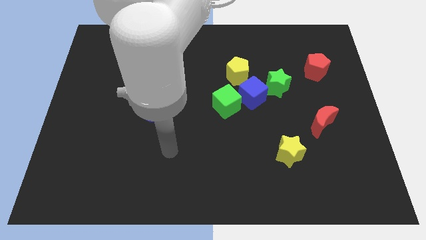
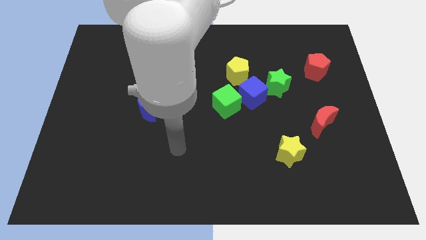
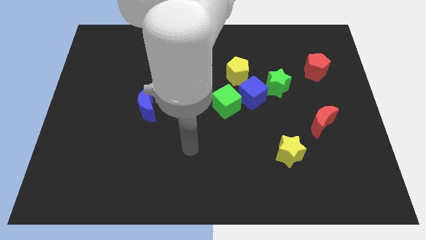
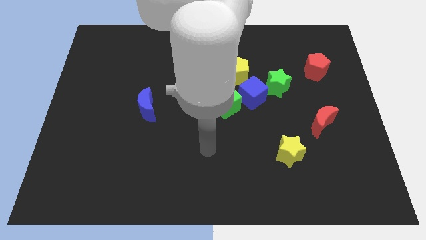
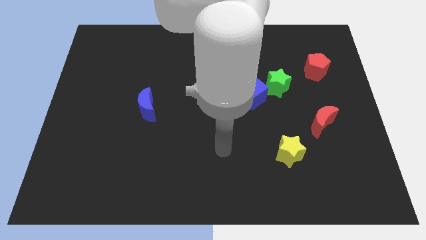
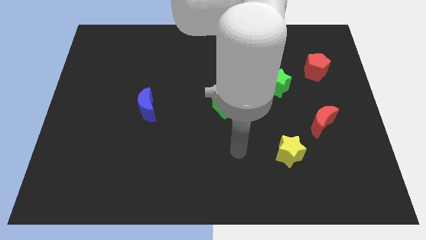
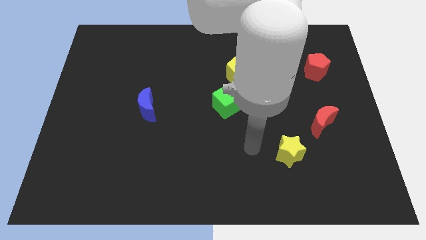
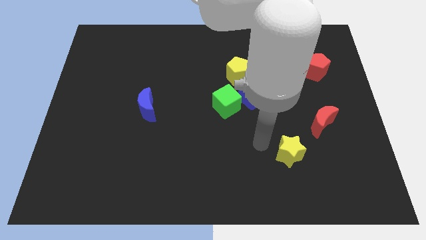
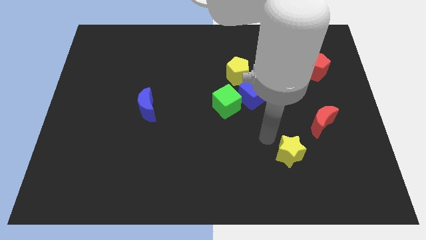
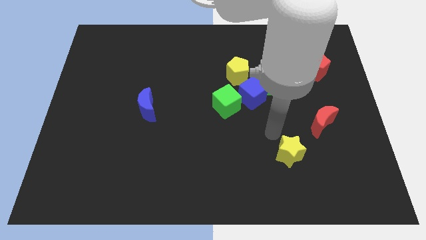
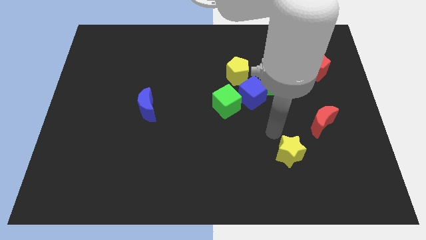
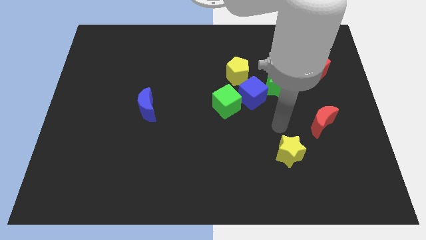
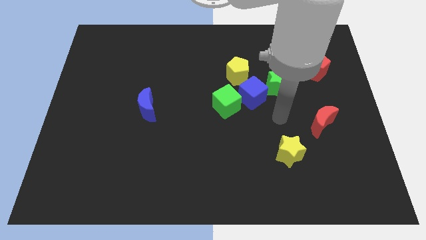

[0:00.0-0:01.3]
place the arm below the green star

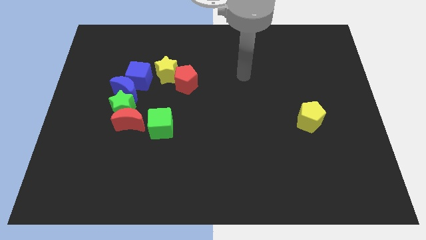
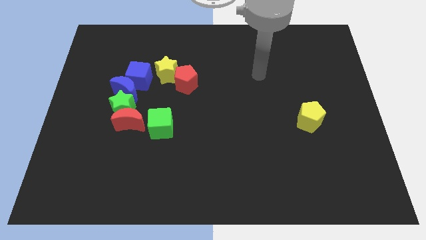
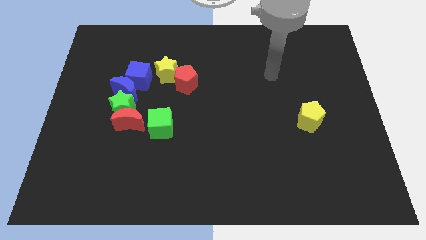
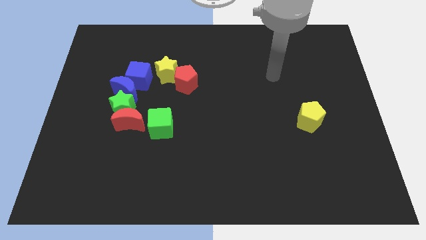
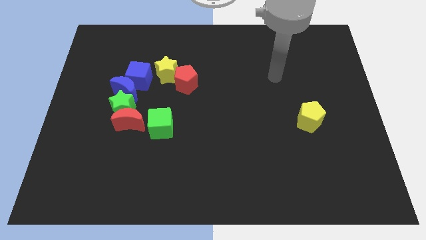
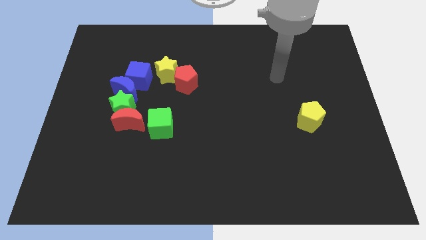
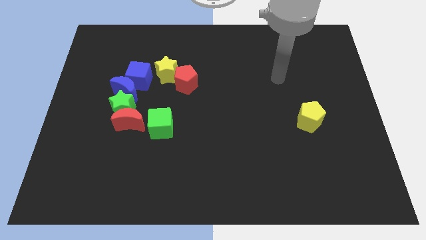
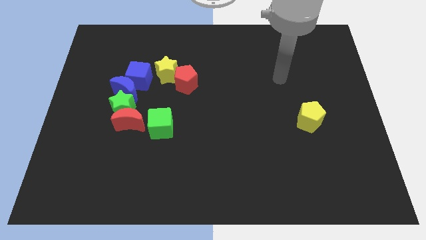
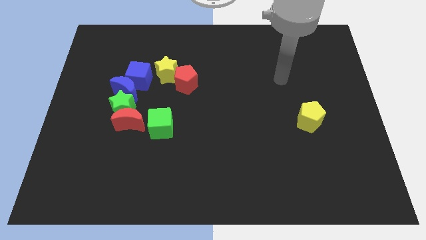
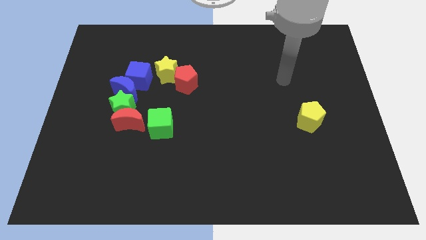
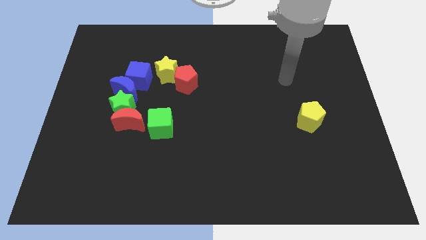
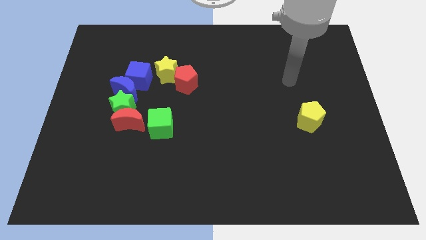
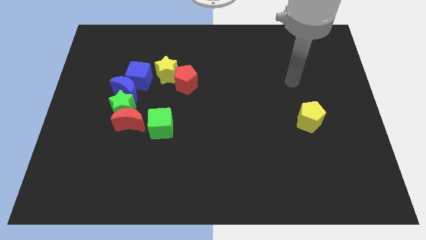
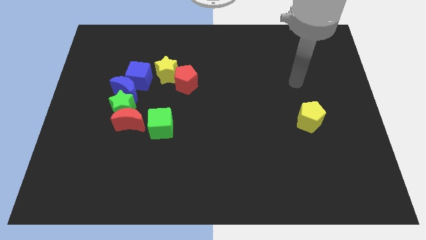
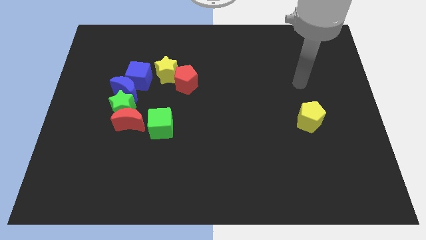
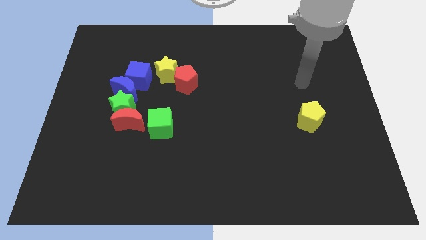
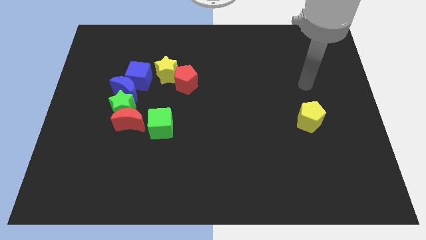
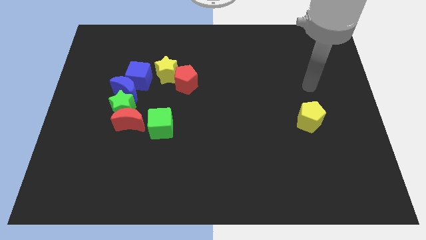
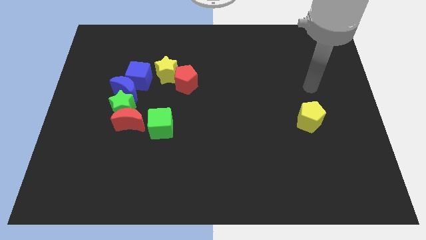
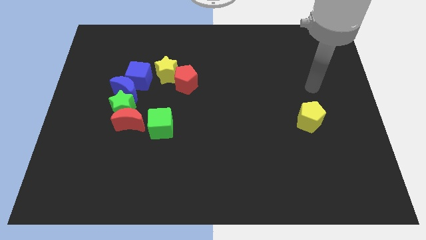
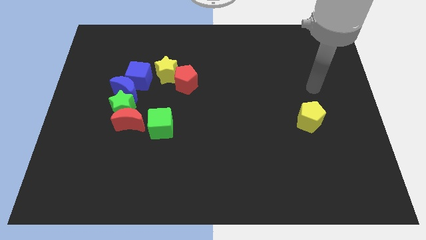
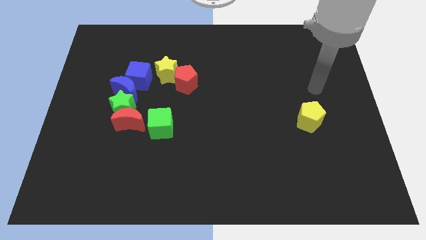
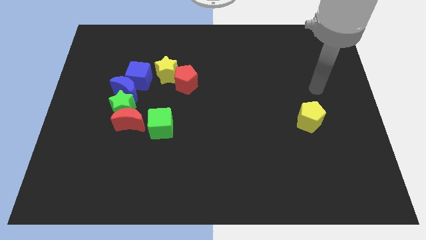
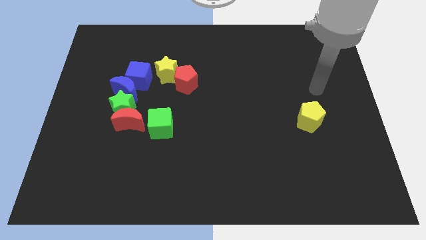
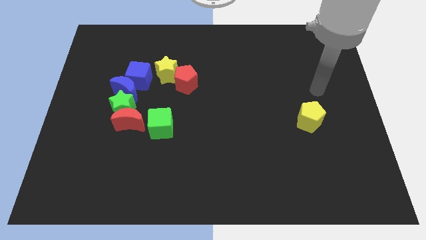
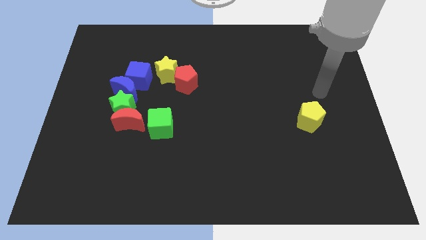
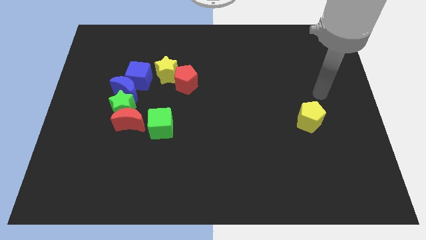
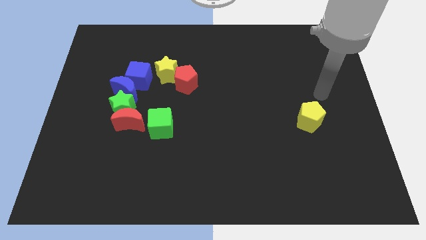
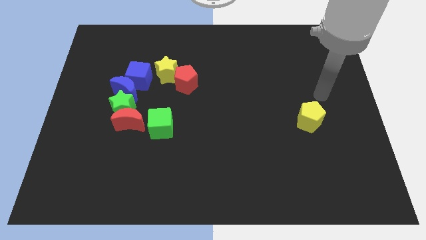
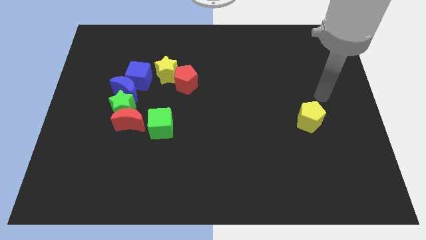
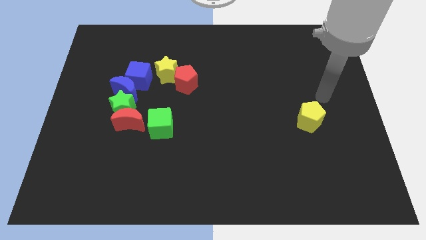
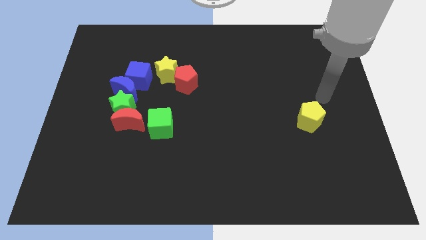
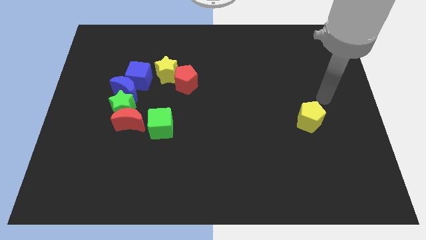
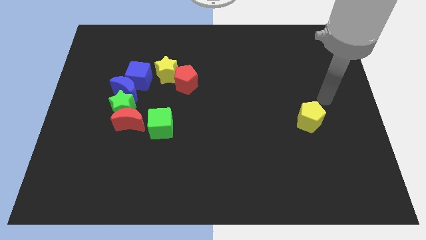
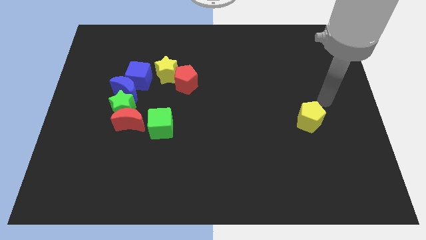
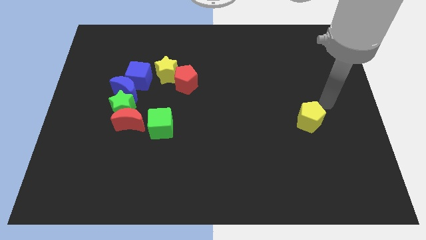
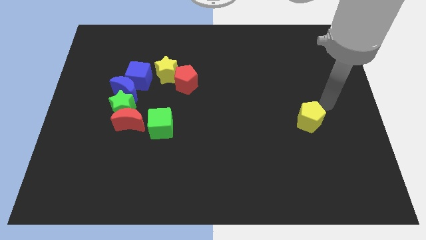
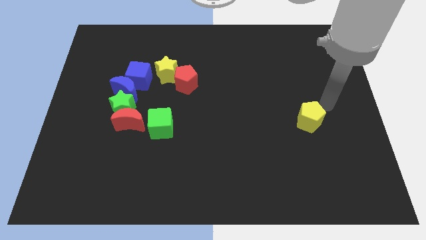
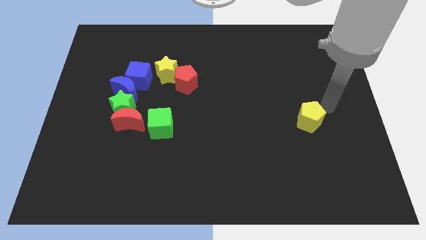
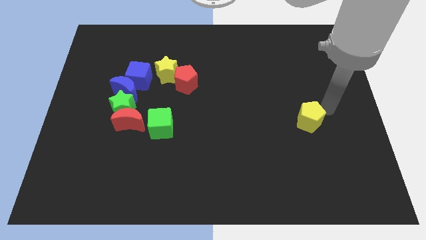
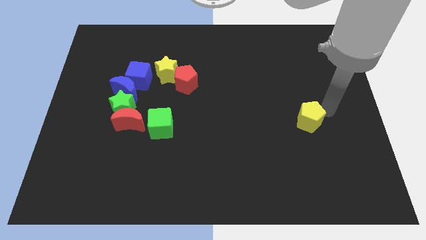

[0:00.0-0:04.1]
place your arm at the top of yellow pentagon

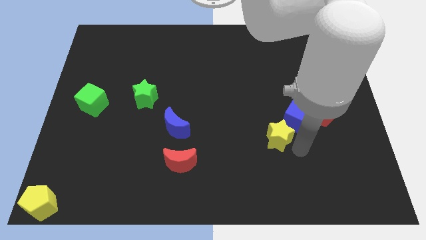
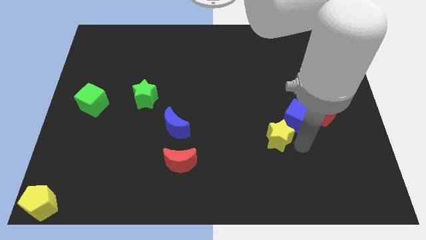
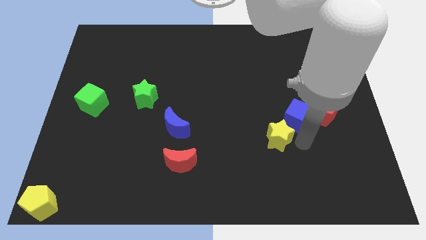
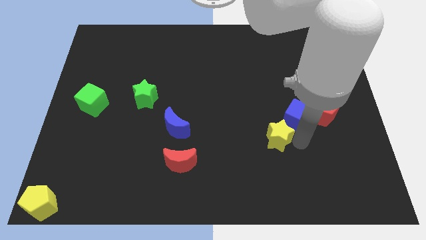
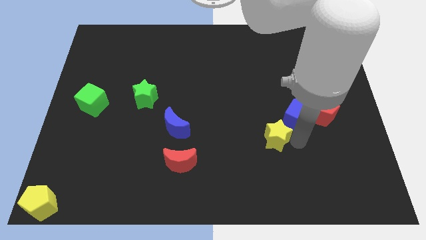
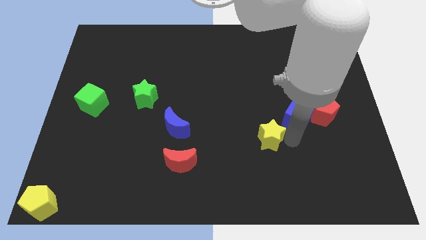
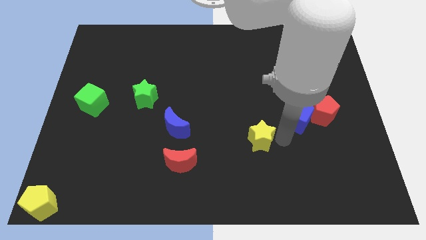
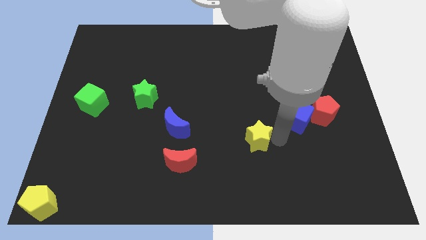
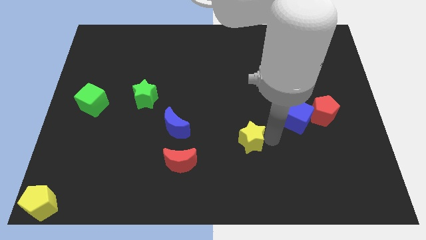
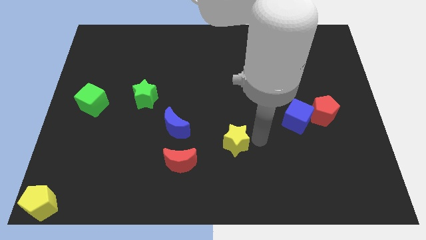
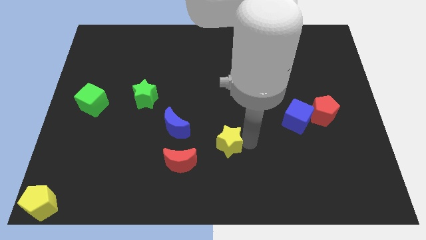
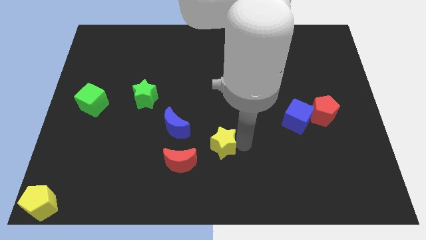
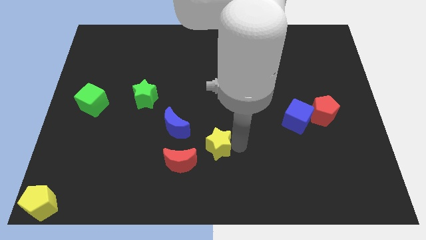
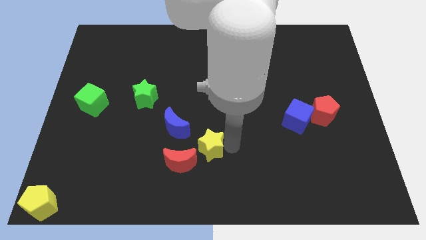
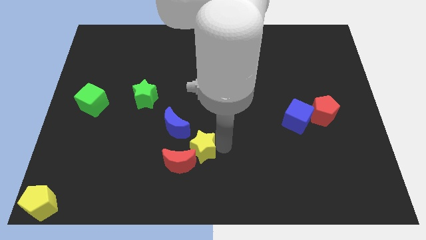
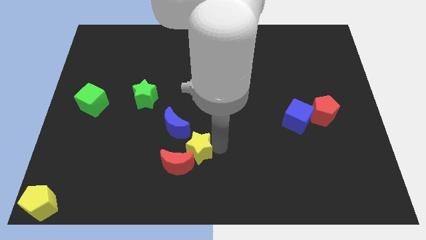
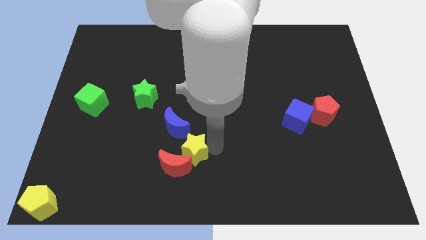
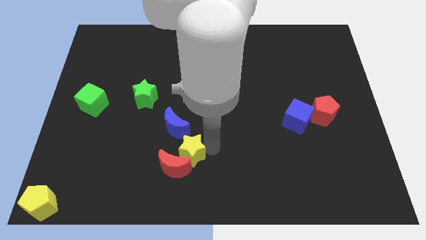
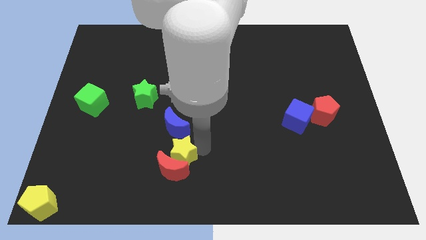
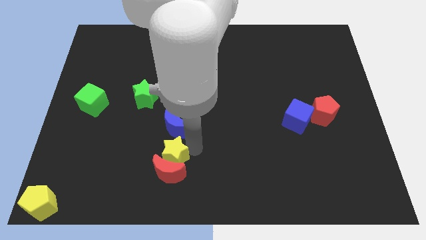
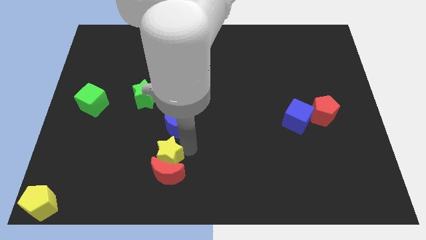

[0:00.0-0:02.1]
push the yellow star into the red moon

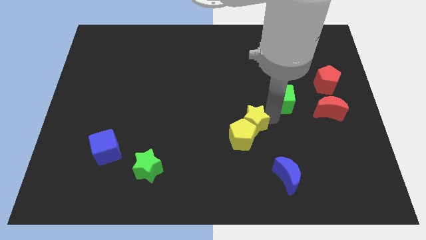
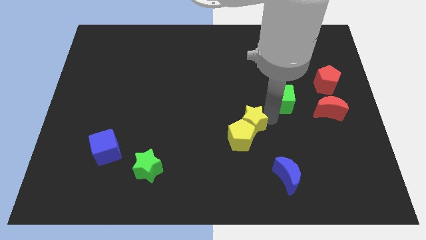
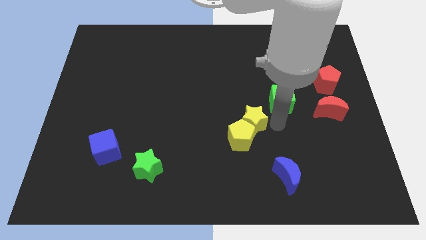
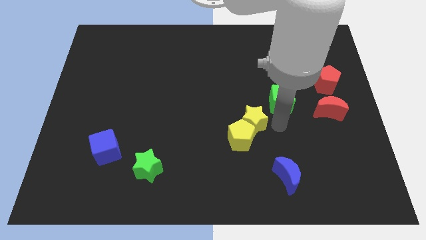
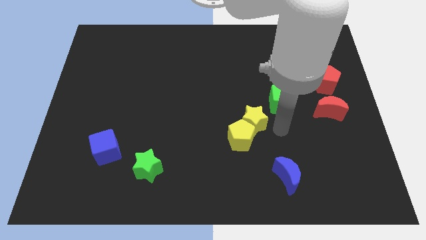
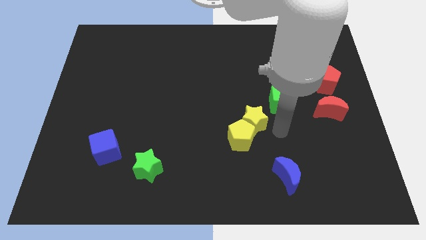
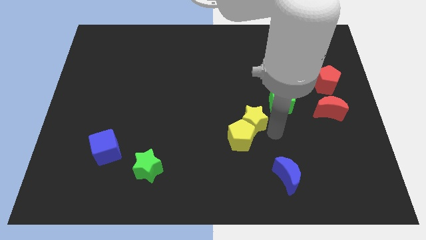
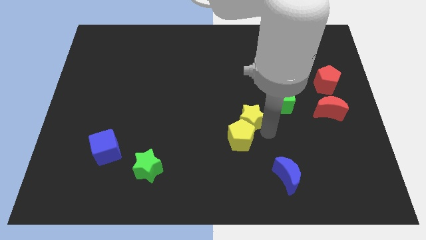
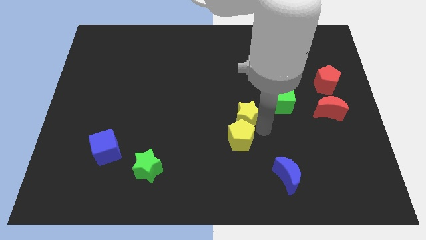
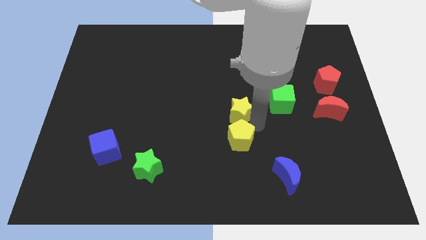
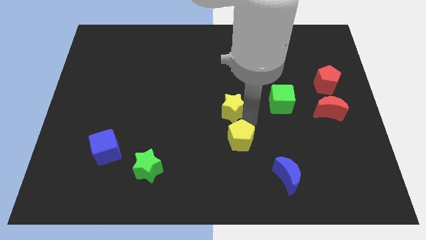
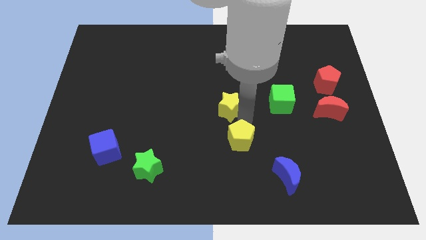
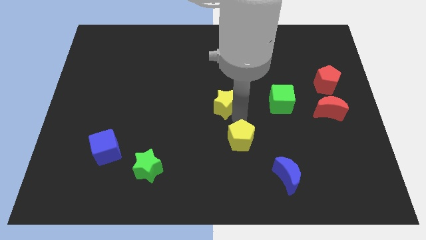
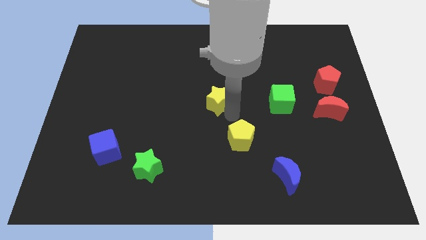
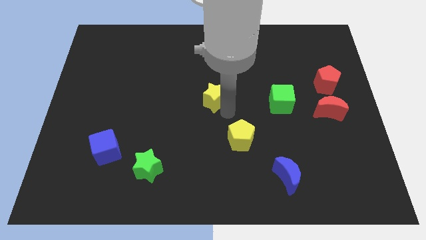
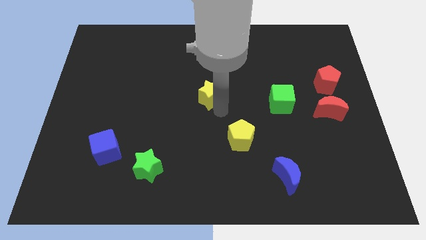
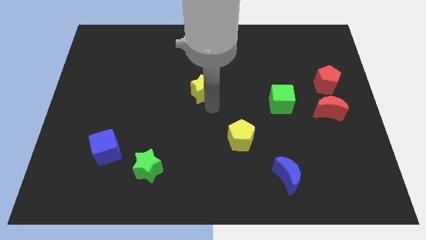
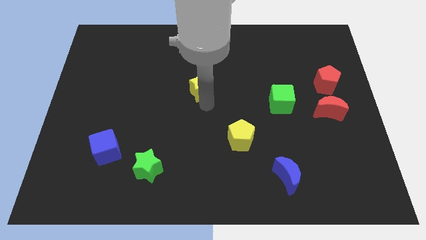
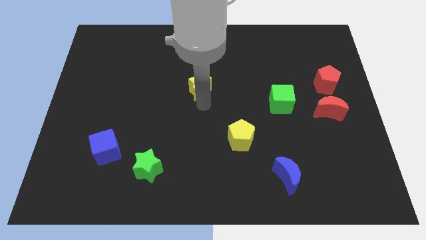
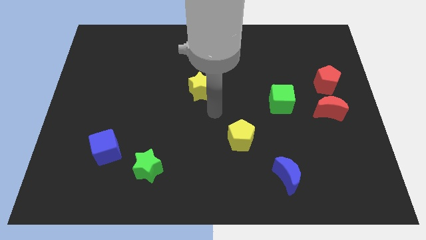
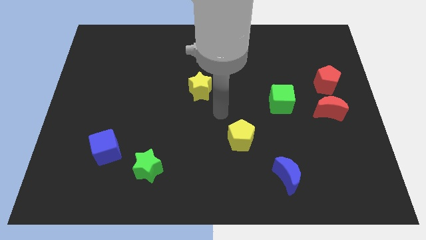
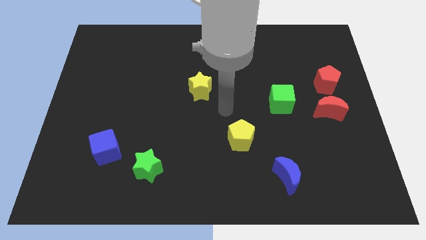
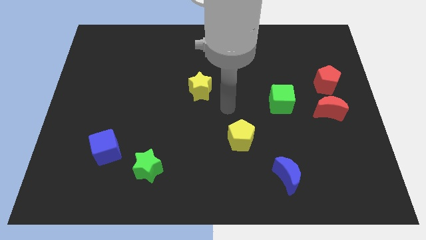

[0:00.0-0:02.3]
move yellow star to the middle of the board
